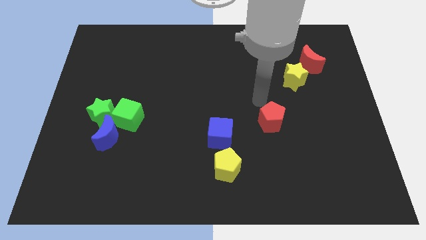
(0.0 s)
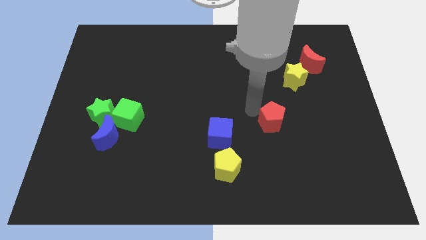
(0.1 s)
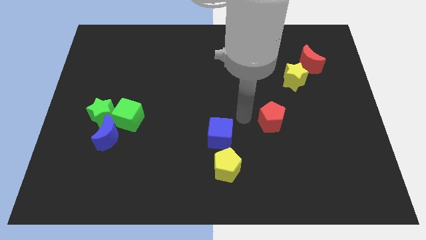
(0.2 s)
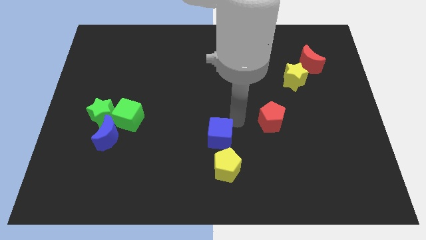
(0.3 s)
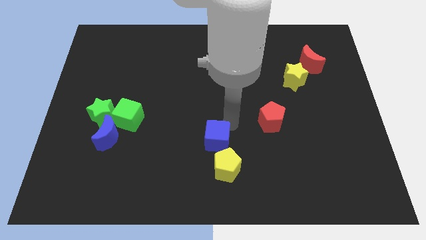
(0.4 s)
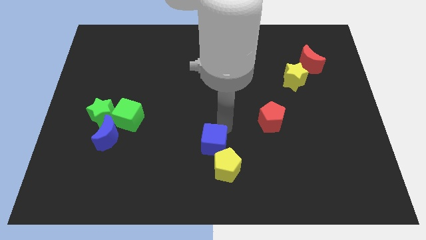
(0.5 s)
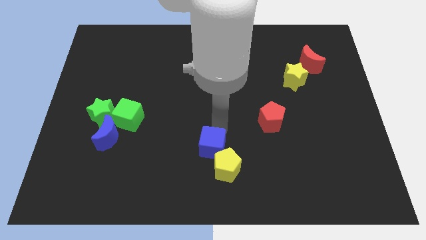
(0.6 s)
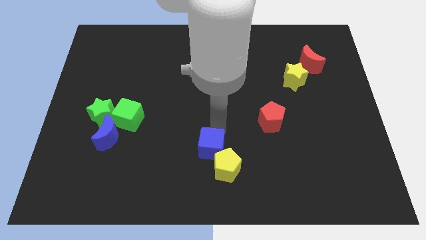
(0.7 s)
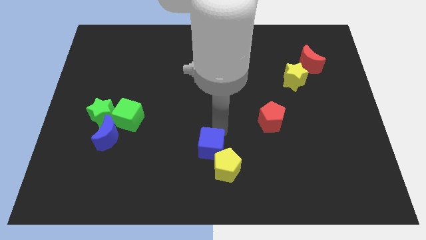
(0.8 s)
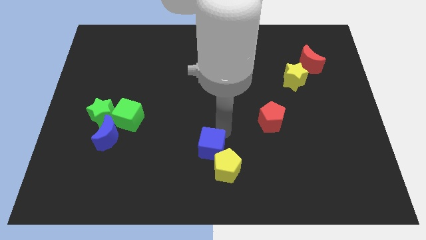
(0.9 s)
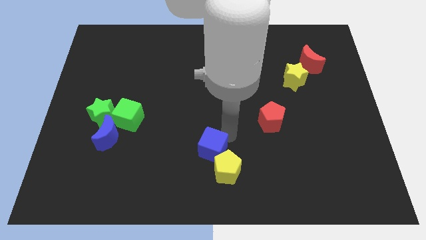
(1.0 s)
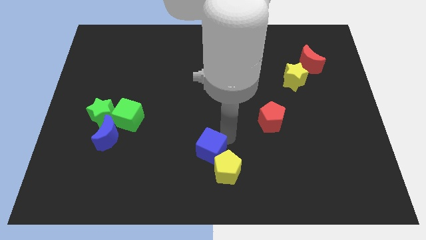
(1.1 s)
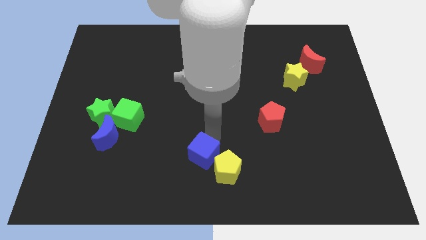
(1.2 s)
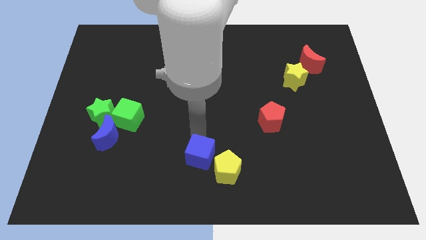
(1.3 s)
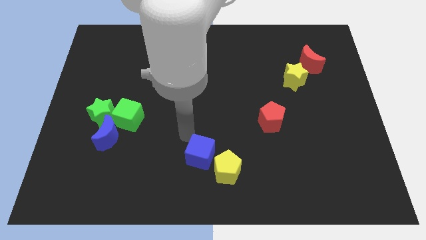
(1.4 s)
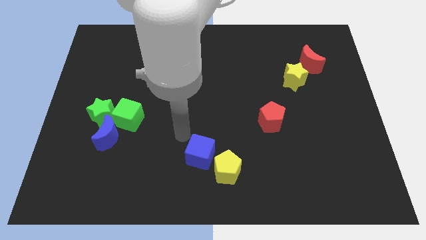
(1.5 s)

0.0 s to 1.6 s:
push the yellow pentagon with blue cube

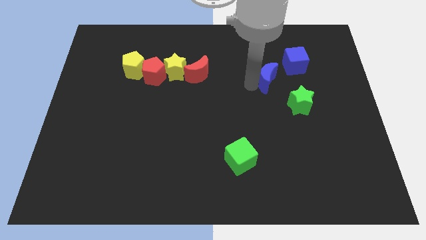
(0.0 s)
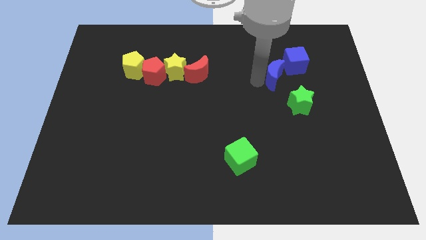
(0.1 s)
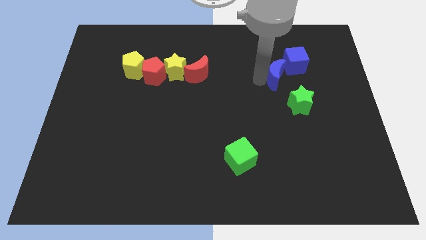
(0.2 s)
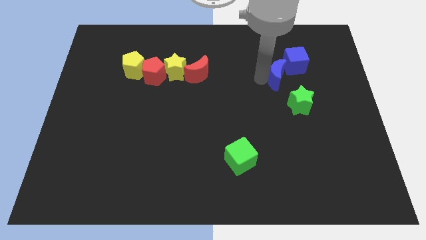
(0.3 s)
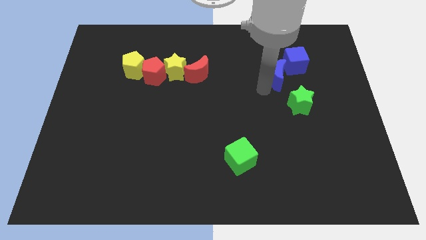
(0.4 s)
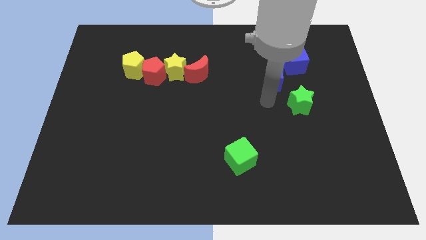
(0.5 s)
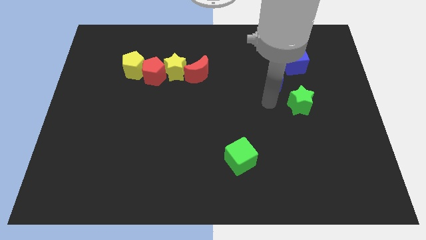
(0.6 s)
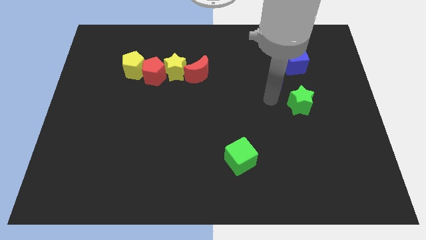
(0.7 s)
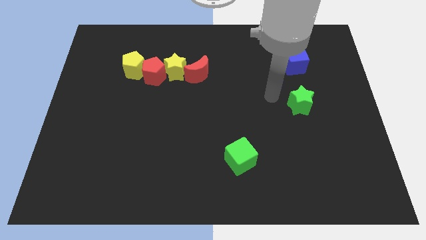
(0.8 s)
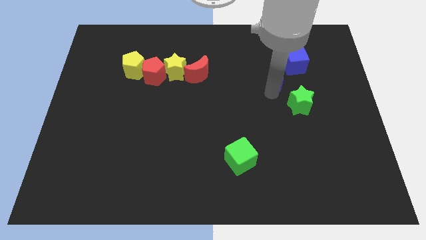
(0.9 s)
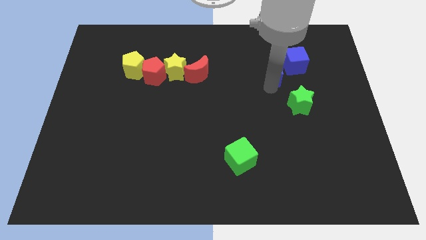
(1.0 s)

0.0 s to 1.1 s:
place blue crescent beside blue cube

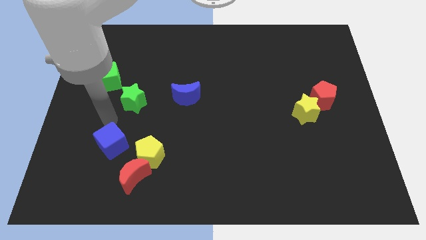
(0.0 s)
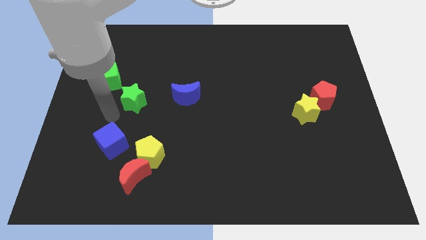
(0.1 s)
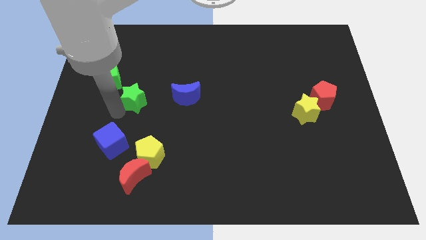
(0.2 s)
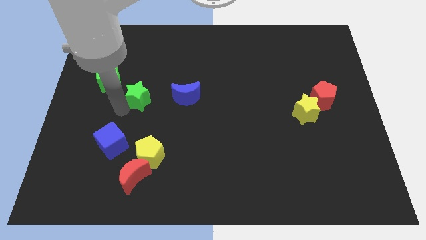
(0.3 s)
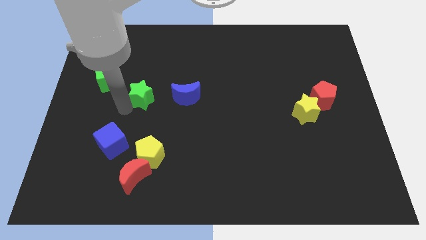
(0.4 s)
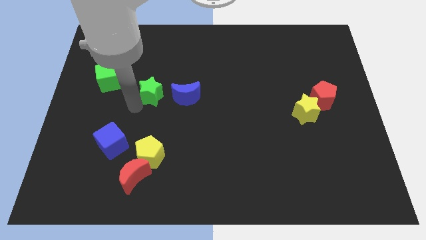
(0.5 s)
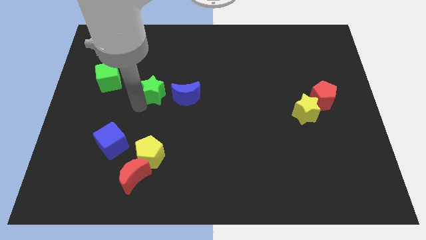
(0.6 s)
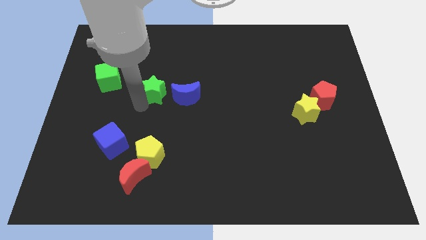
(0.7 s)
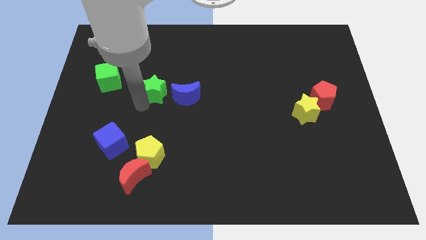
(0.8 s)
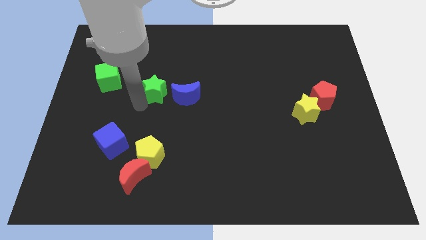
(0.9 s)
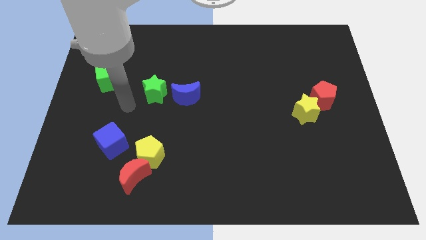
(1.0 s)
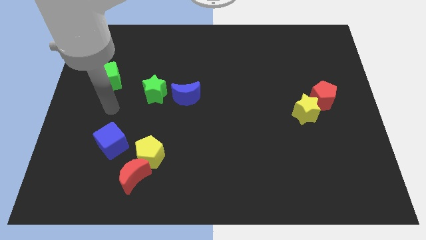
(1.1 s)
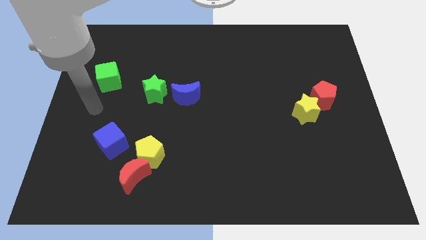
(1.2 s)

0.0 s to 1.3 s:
move the green star to the left of blue moon

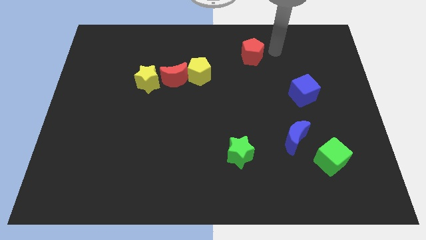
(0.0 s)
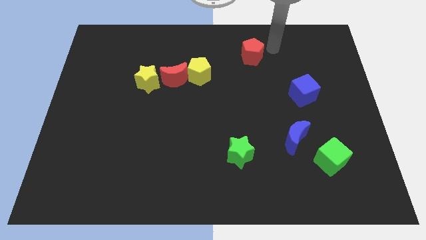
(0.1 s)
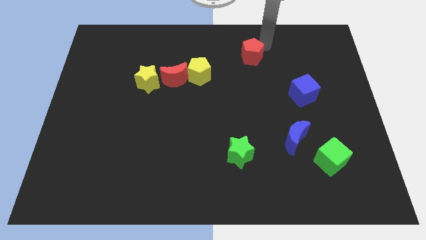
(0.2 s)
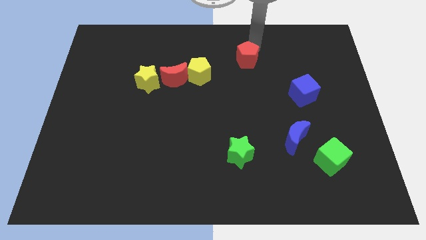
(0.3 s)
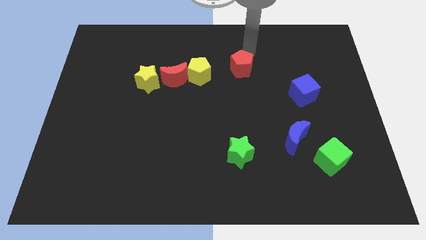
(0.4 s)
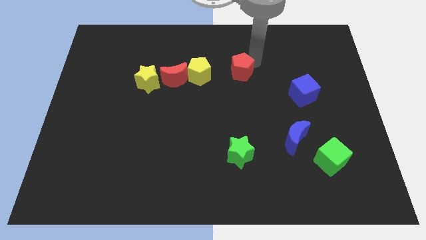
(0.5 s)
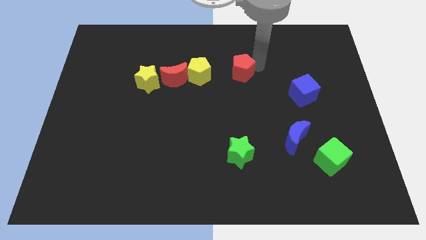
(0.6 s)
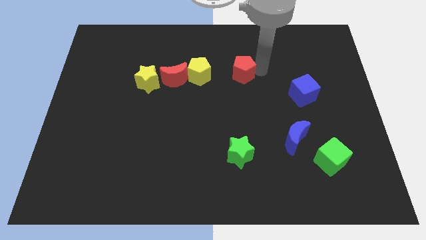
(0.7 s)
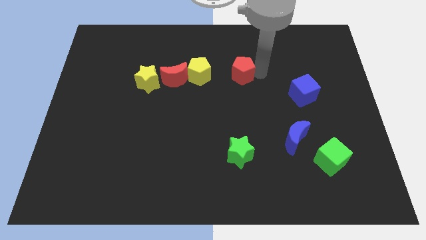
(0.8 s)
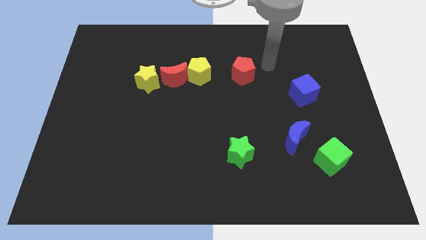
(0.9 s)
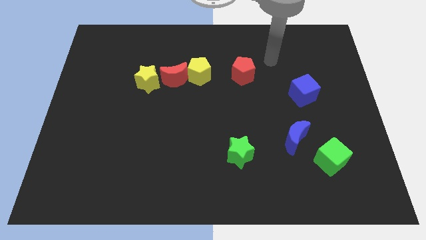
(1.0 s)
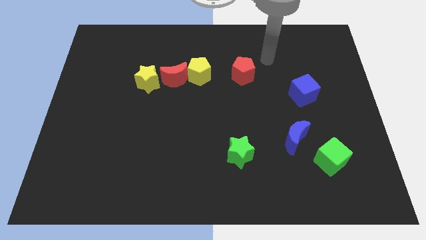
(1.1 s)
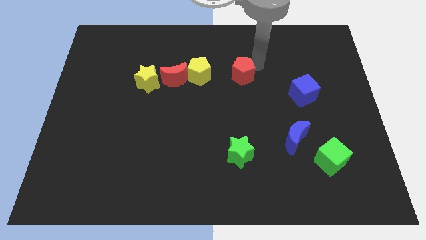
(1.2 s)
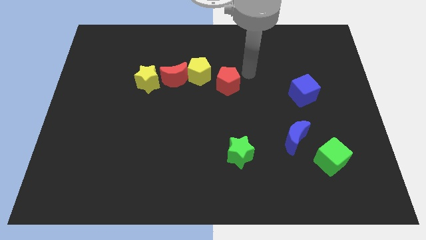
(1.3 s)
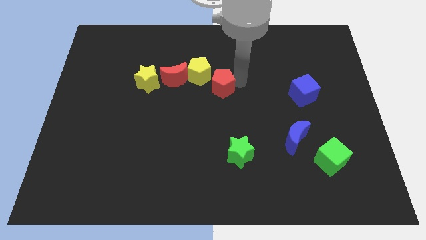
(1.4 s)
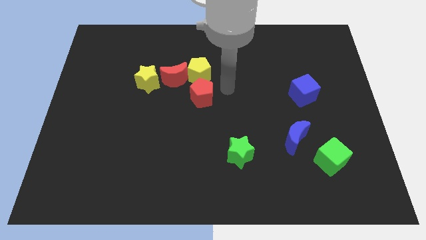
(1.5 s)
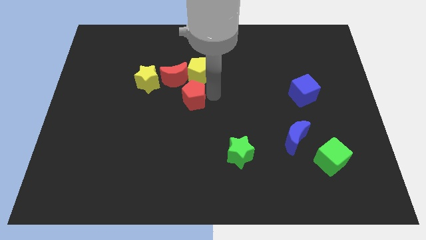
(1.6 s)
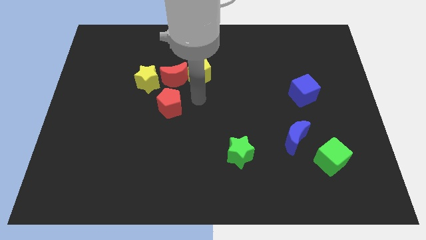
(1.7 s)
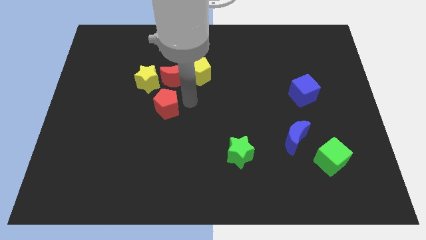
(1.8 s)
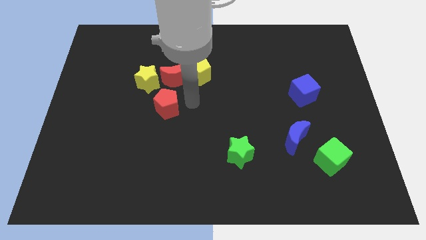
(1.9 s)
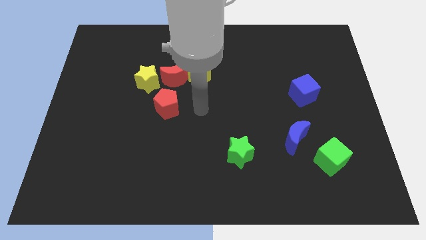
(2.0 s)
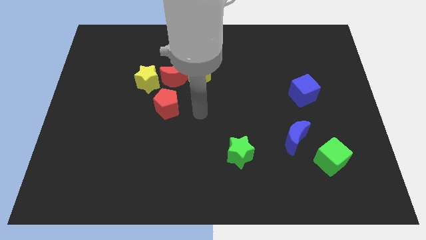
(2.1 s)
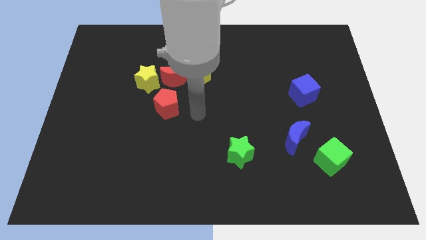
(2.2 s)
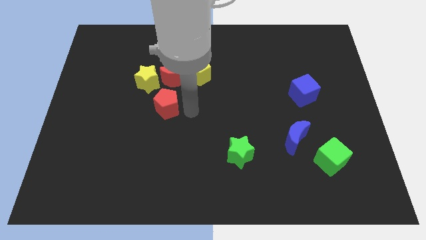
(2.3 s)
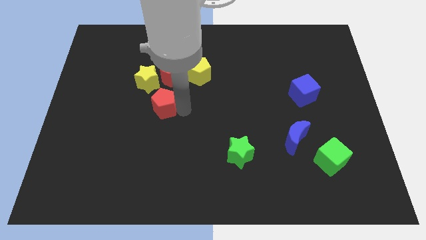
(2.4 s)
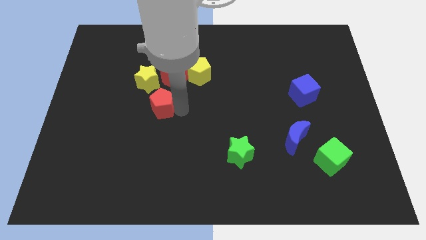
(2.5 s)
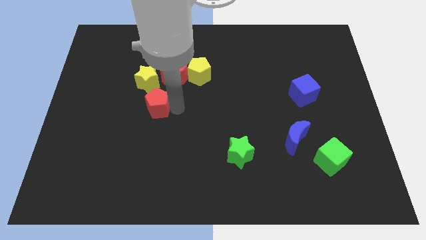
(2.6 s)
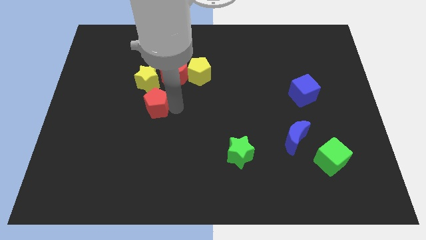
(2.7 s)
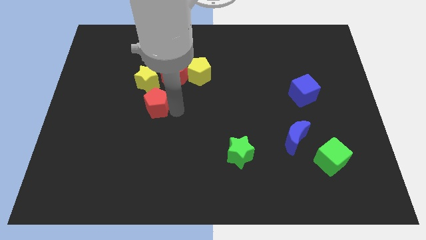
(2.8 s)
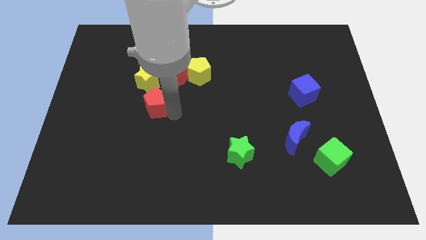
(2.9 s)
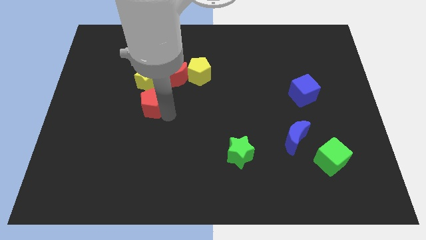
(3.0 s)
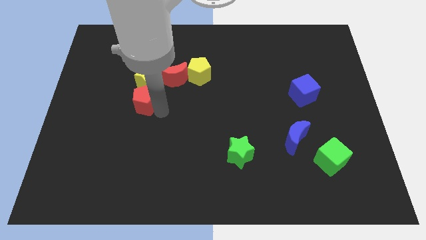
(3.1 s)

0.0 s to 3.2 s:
move the red pentagon to the bottom of the yellow star

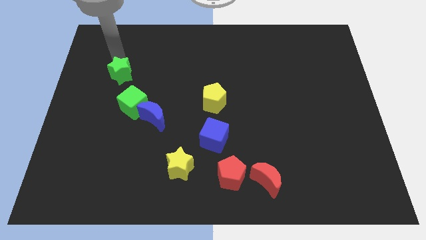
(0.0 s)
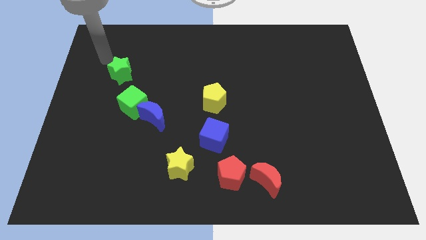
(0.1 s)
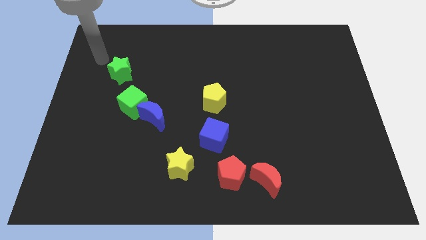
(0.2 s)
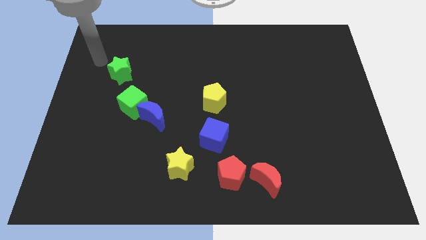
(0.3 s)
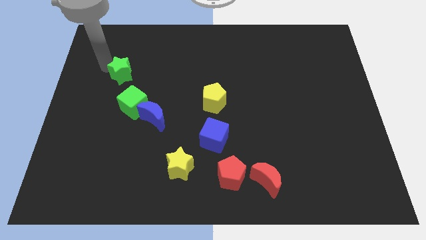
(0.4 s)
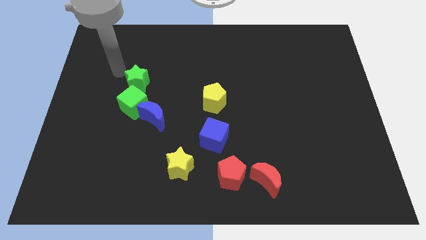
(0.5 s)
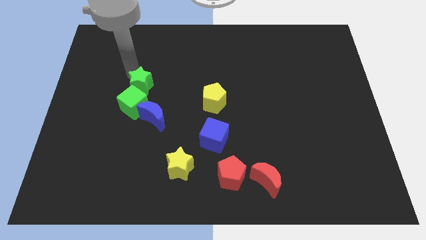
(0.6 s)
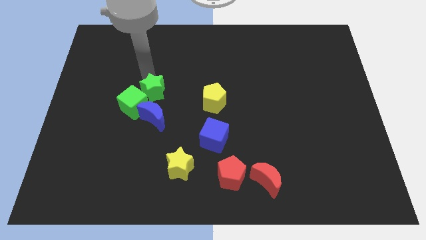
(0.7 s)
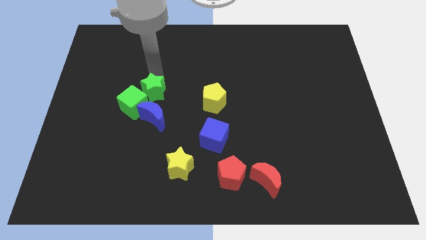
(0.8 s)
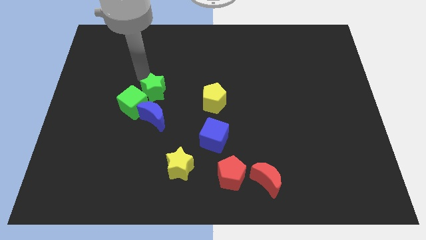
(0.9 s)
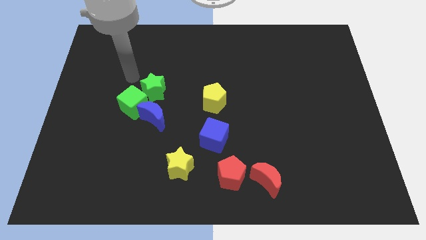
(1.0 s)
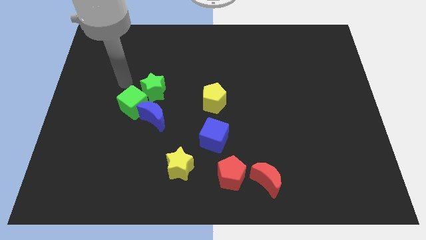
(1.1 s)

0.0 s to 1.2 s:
push the green star to the top right of the green cube

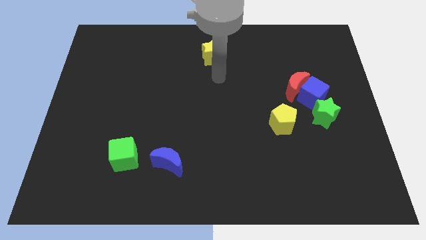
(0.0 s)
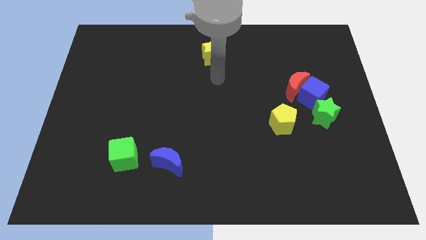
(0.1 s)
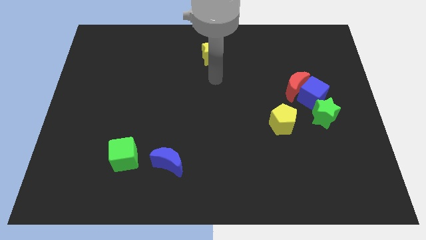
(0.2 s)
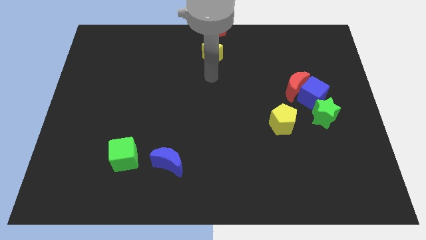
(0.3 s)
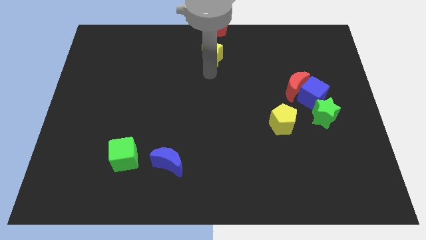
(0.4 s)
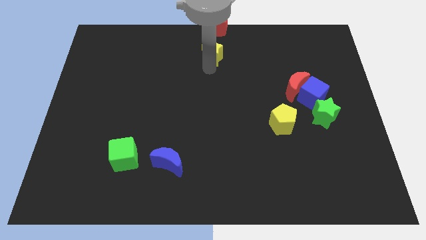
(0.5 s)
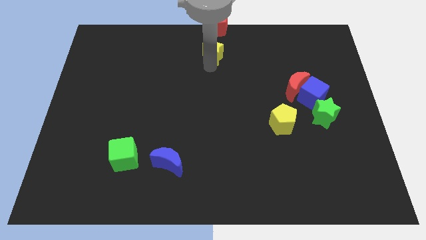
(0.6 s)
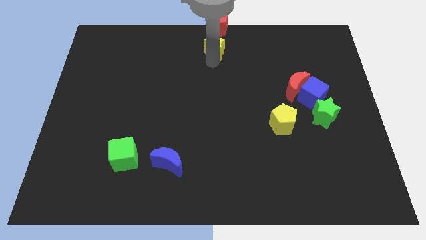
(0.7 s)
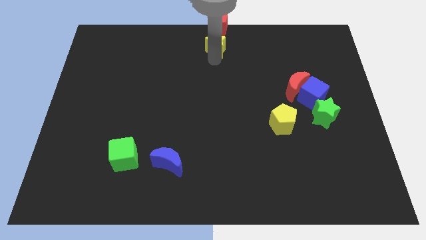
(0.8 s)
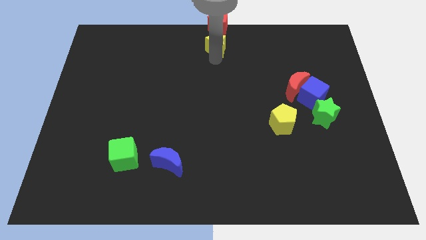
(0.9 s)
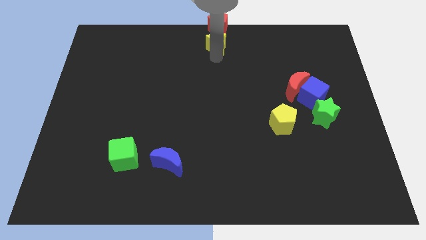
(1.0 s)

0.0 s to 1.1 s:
move yellow star towards red pentagon
